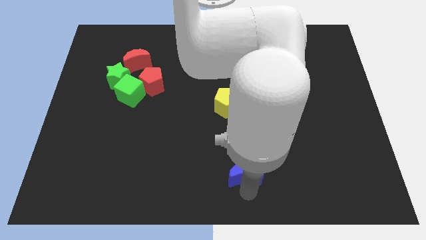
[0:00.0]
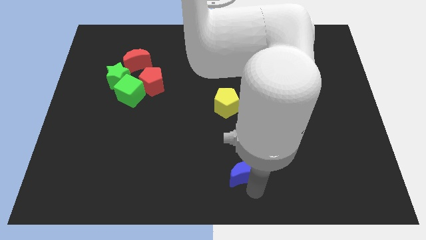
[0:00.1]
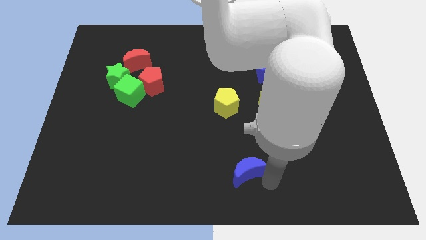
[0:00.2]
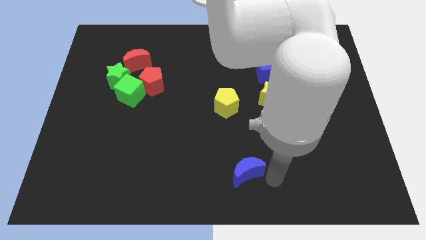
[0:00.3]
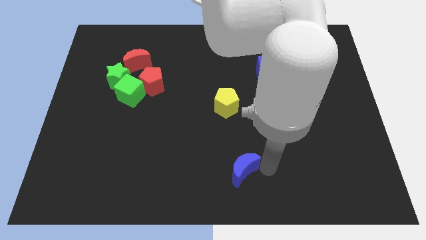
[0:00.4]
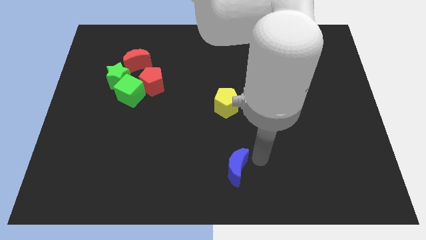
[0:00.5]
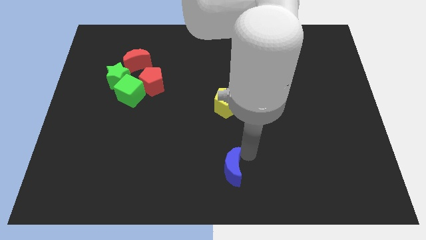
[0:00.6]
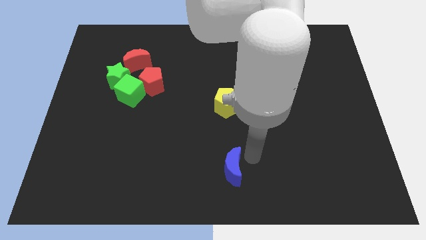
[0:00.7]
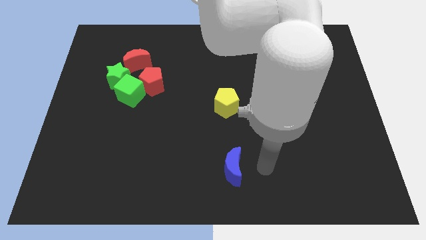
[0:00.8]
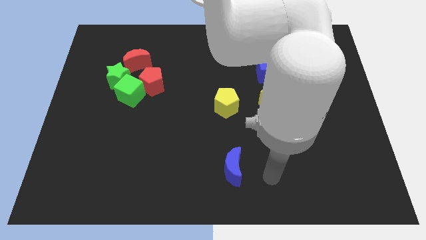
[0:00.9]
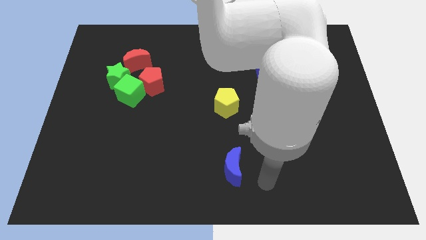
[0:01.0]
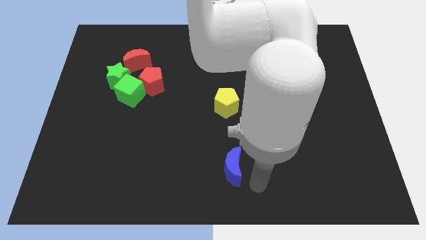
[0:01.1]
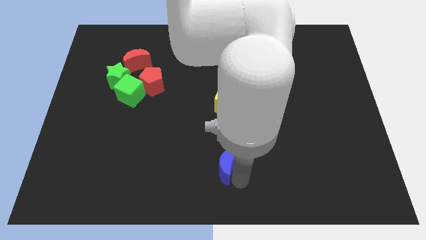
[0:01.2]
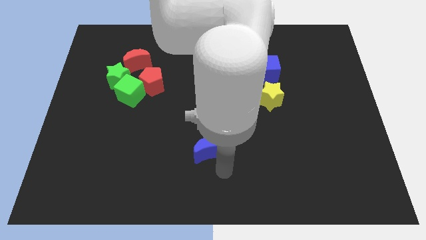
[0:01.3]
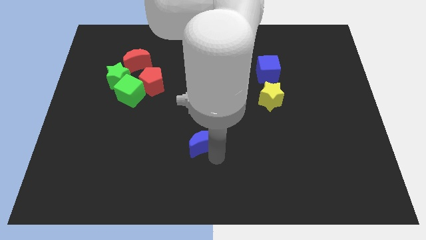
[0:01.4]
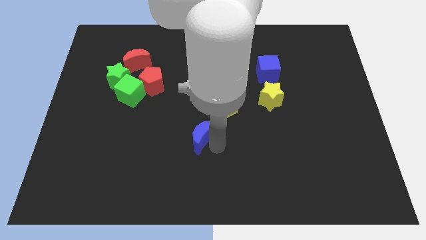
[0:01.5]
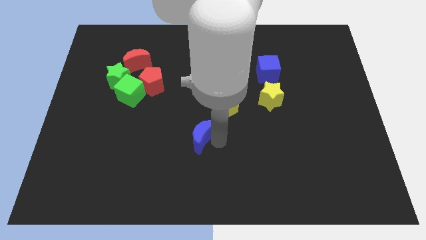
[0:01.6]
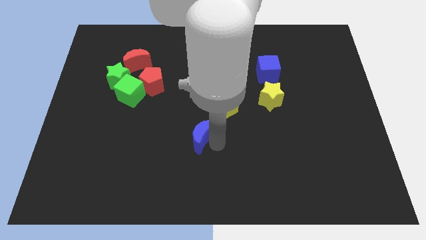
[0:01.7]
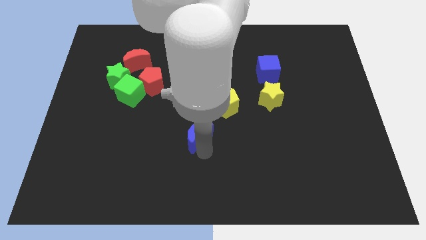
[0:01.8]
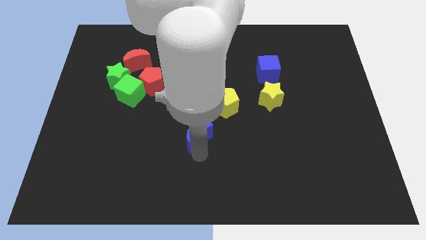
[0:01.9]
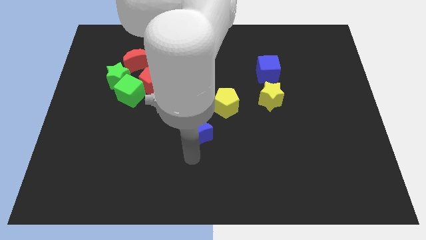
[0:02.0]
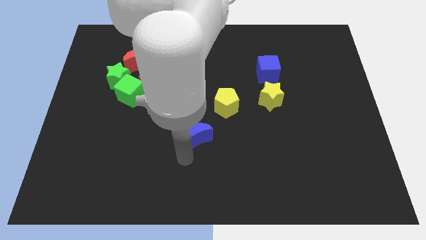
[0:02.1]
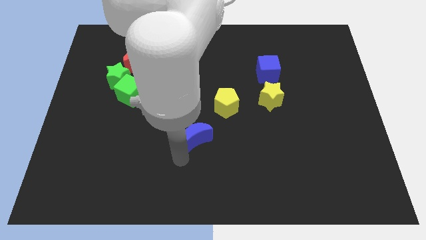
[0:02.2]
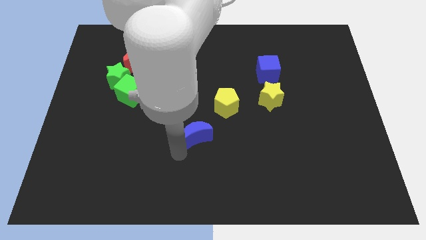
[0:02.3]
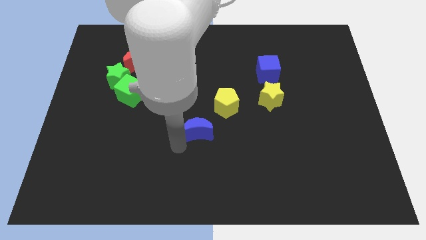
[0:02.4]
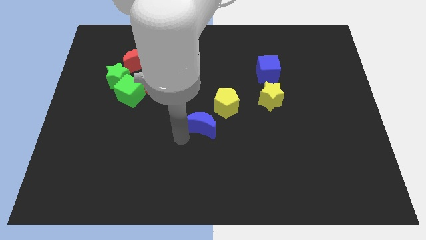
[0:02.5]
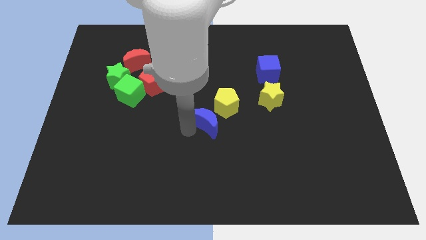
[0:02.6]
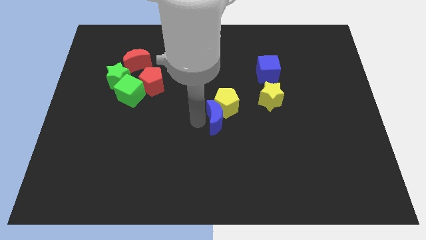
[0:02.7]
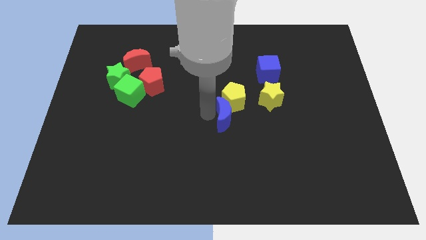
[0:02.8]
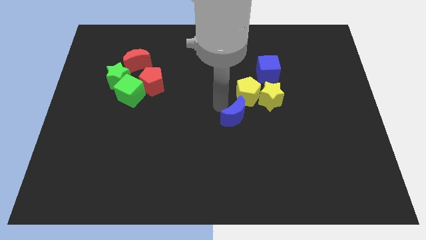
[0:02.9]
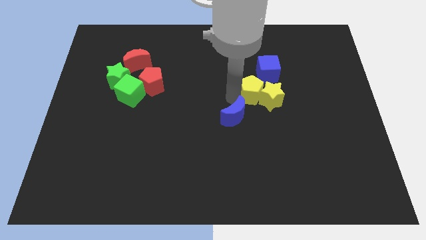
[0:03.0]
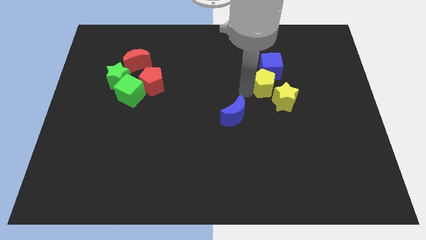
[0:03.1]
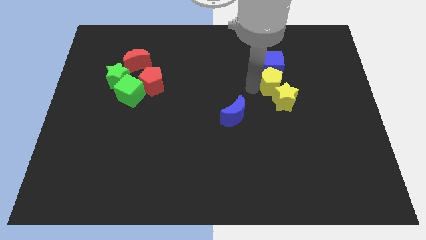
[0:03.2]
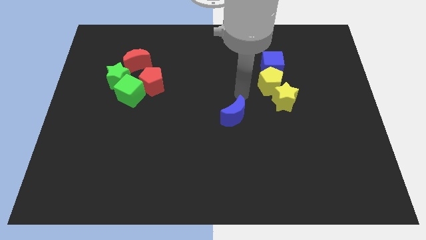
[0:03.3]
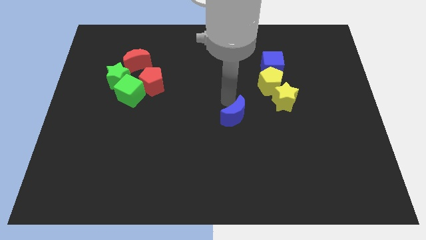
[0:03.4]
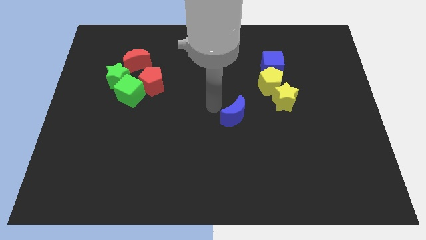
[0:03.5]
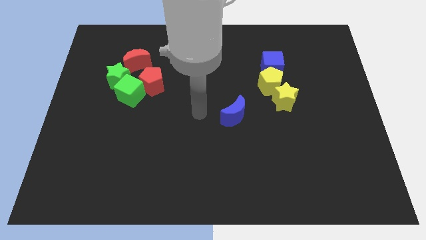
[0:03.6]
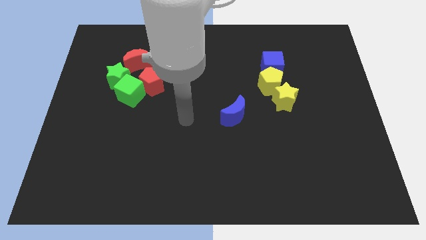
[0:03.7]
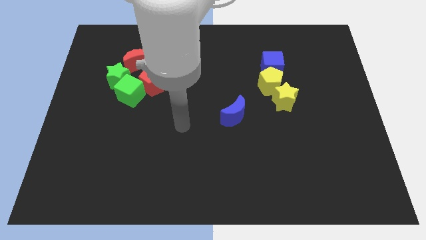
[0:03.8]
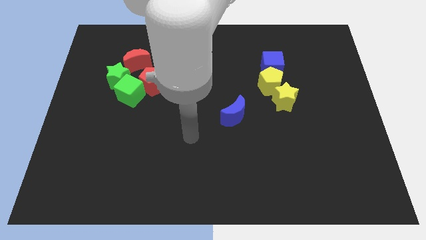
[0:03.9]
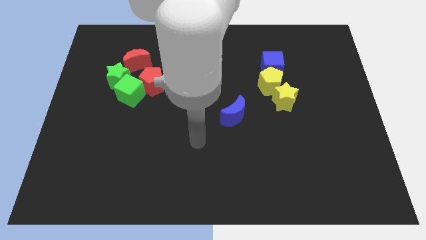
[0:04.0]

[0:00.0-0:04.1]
put the blue moon diagonally bottom left to yellow pentagon

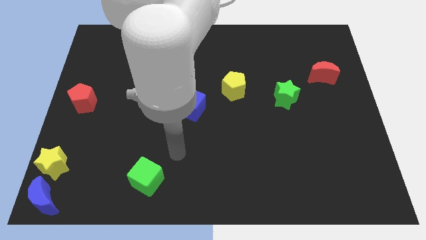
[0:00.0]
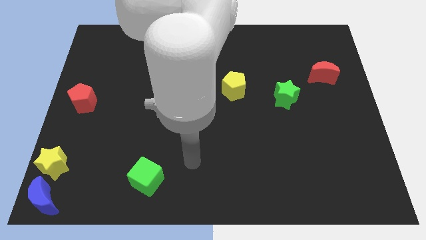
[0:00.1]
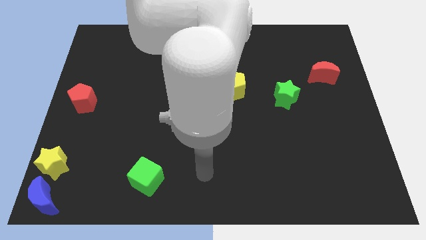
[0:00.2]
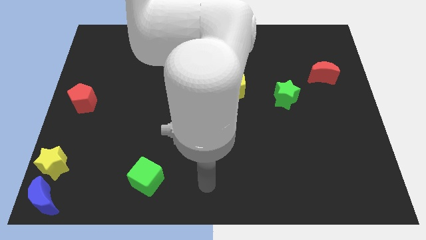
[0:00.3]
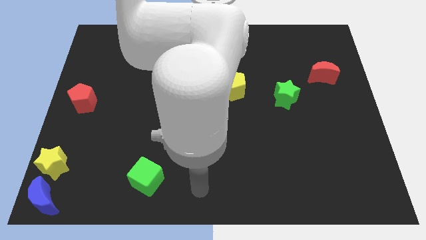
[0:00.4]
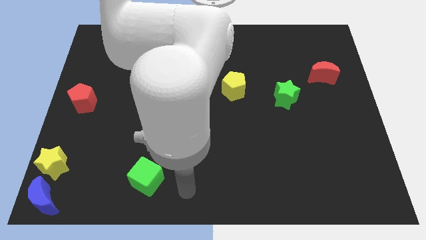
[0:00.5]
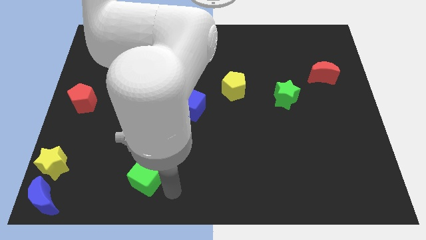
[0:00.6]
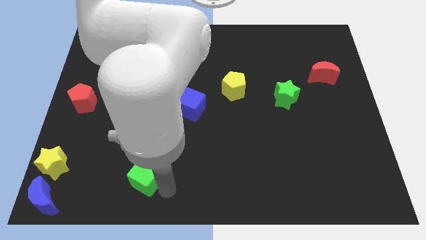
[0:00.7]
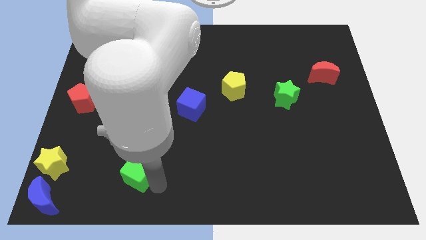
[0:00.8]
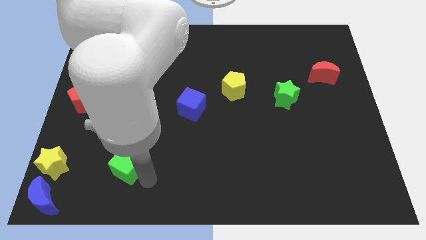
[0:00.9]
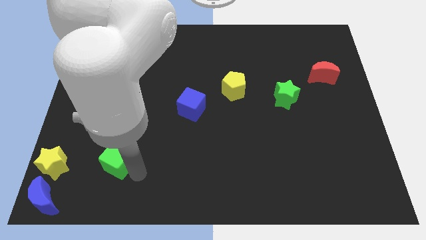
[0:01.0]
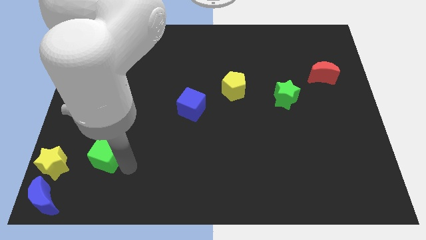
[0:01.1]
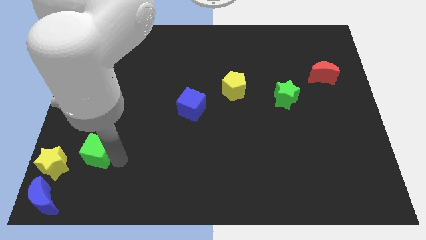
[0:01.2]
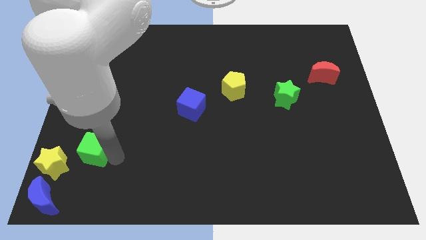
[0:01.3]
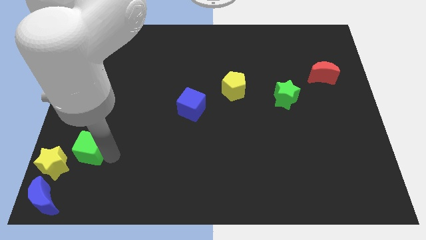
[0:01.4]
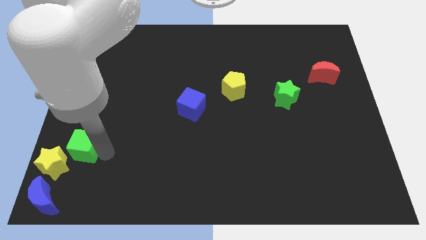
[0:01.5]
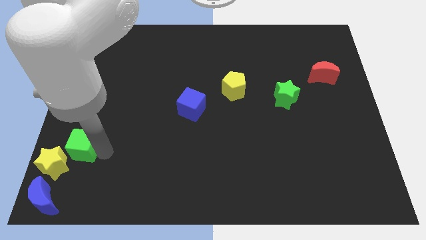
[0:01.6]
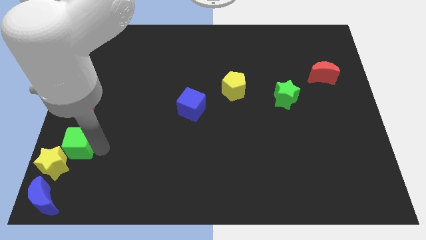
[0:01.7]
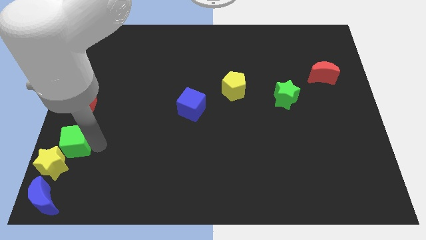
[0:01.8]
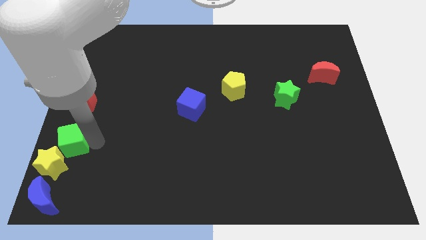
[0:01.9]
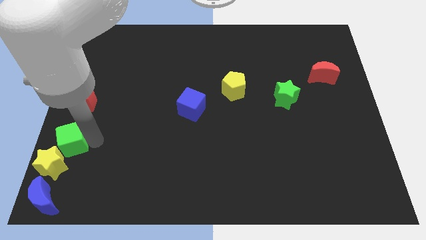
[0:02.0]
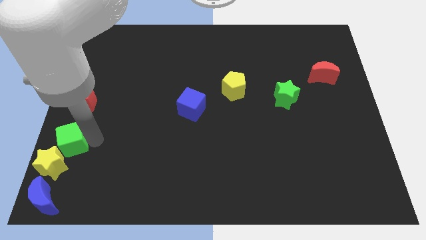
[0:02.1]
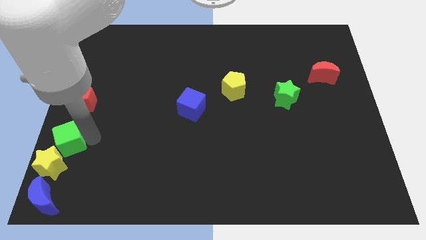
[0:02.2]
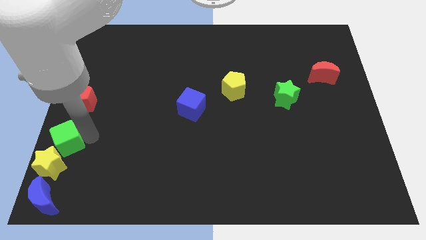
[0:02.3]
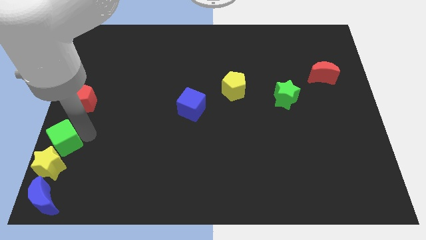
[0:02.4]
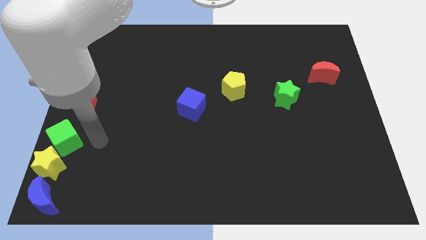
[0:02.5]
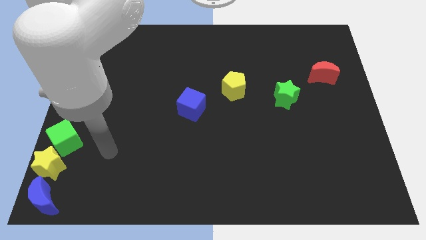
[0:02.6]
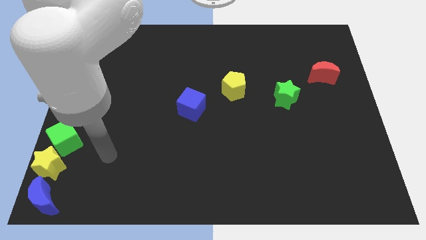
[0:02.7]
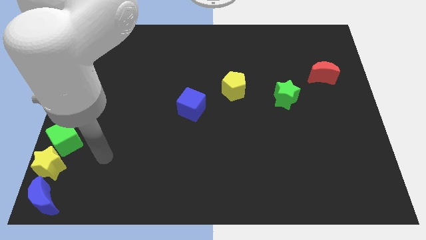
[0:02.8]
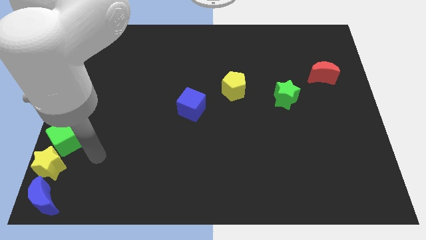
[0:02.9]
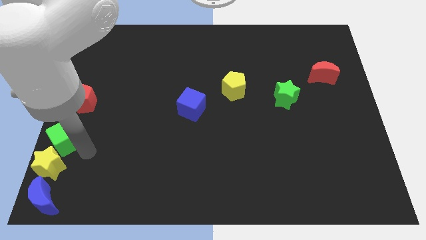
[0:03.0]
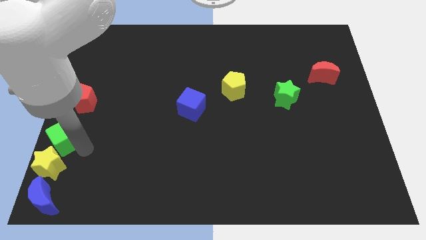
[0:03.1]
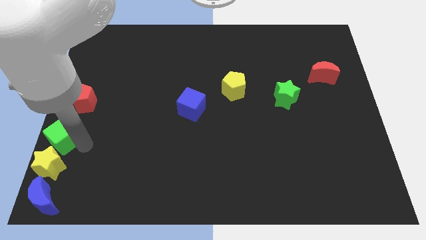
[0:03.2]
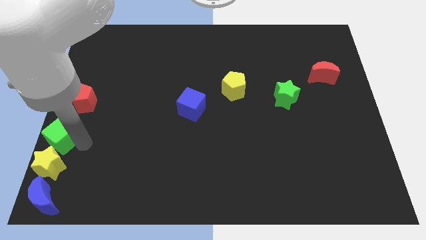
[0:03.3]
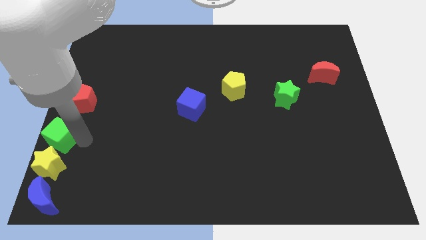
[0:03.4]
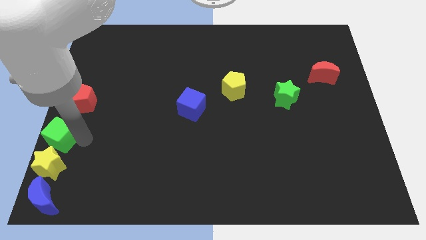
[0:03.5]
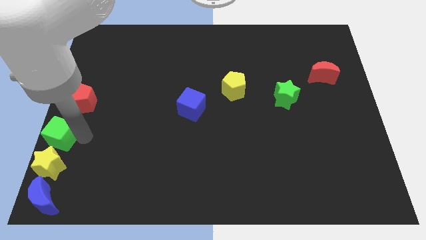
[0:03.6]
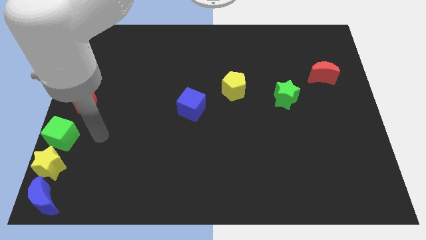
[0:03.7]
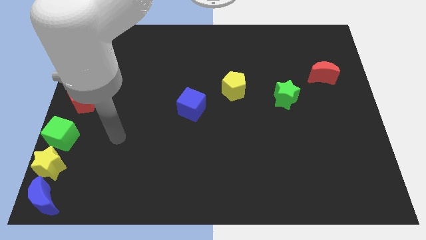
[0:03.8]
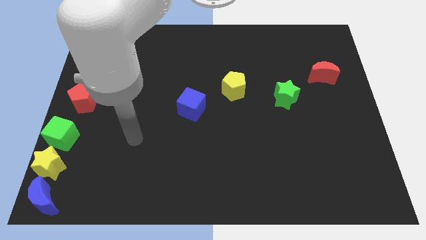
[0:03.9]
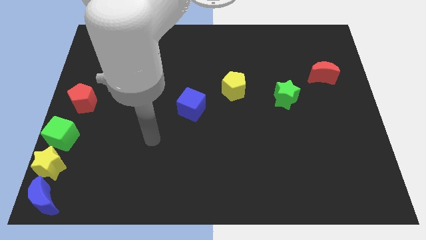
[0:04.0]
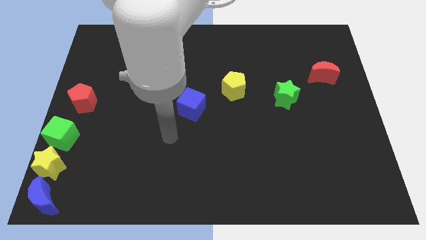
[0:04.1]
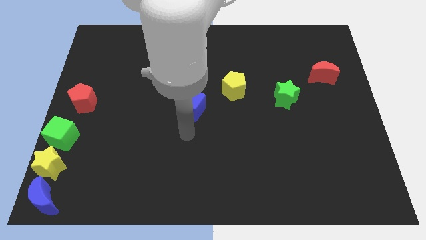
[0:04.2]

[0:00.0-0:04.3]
push the green cube into the yellow star

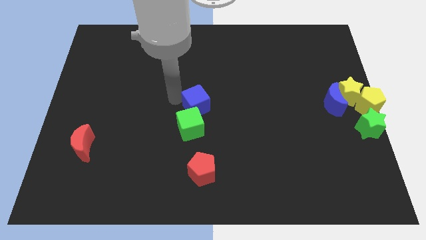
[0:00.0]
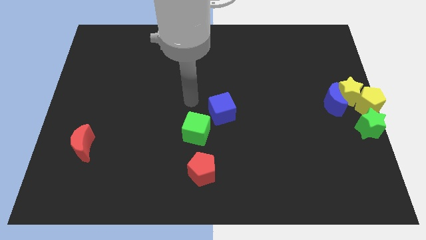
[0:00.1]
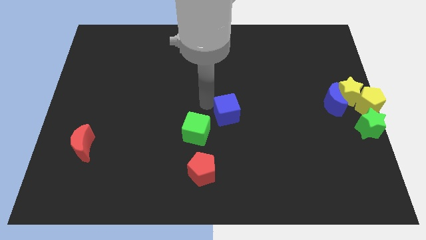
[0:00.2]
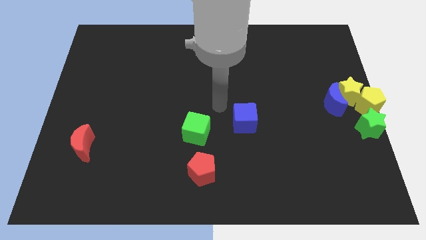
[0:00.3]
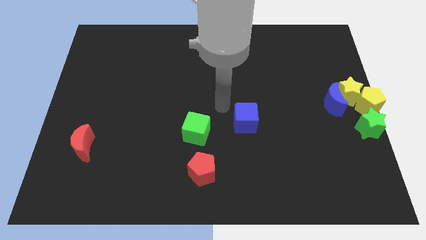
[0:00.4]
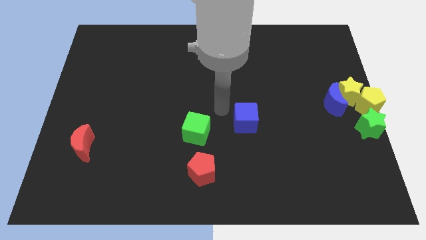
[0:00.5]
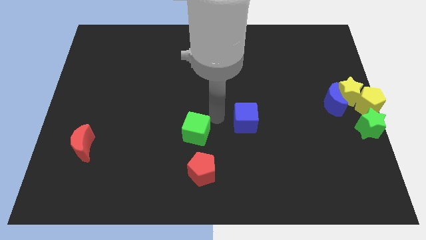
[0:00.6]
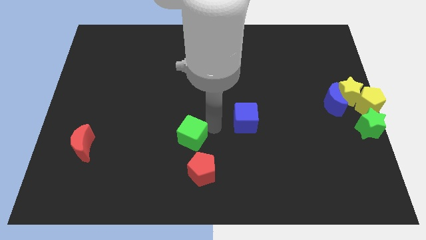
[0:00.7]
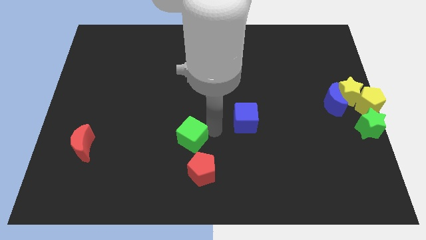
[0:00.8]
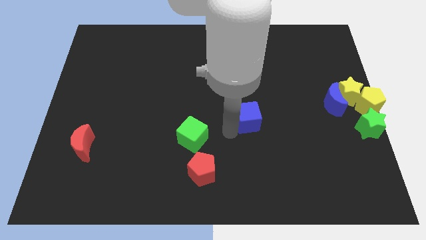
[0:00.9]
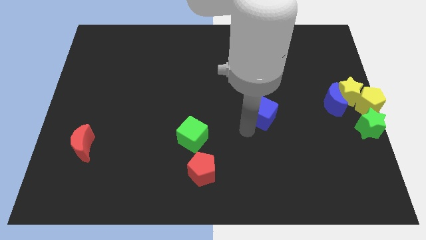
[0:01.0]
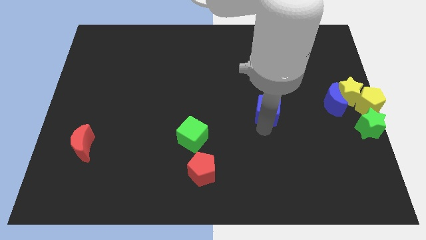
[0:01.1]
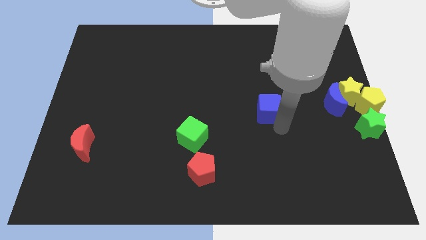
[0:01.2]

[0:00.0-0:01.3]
separate blue cube from green cube
